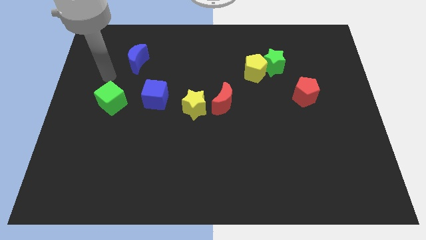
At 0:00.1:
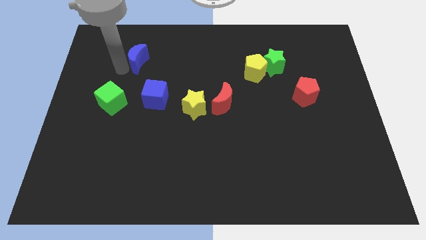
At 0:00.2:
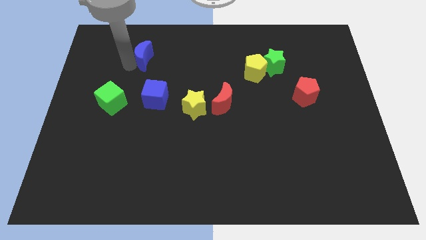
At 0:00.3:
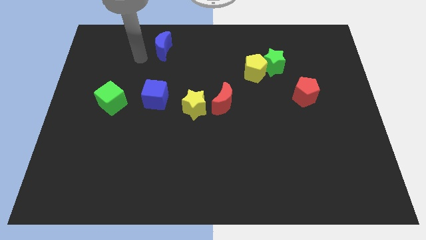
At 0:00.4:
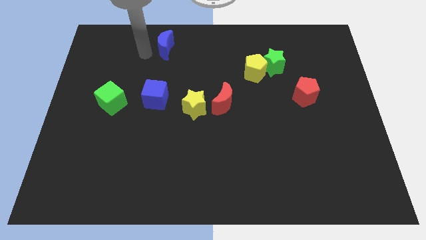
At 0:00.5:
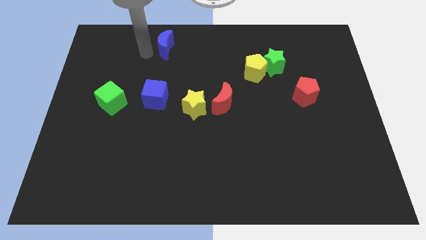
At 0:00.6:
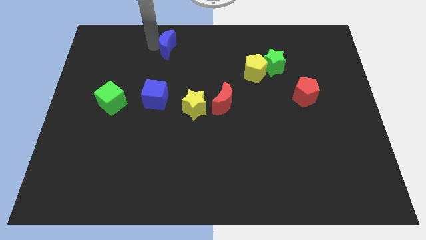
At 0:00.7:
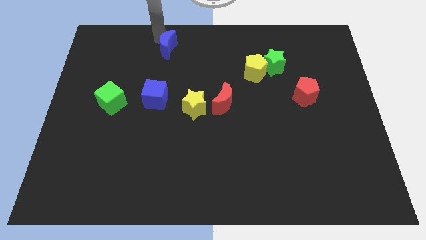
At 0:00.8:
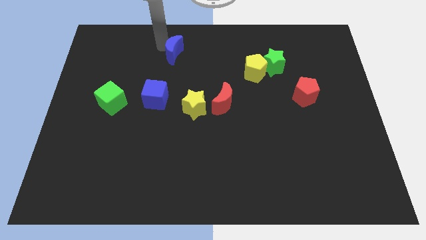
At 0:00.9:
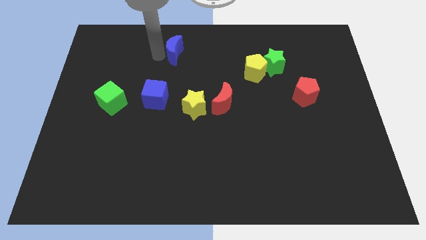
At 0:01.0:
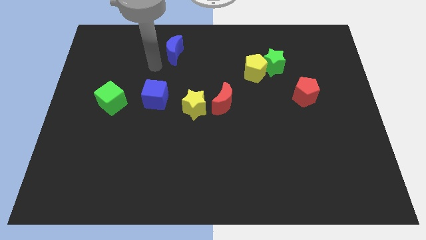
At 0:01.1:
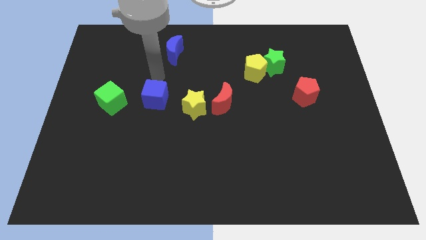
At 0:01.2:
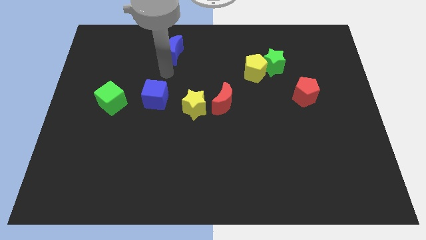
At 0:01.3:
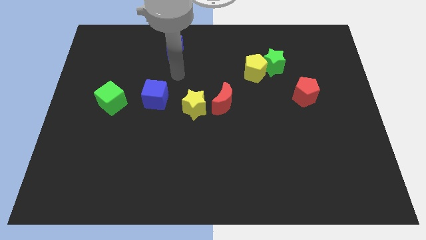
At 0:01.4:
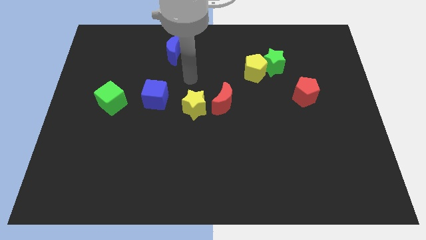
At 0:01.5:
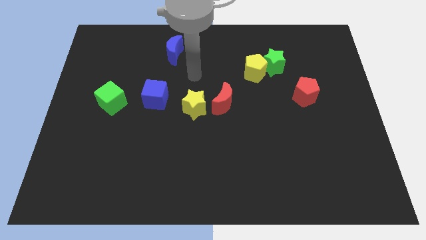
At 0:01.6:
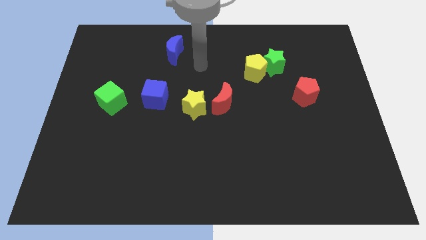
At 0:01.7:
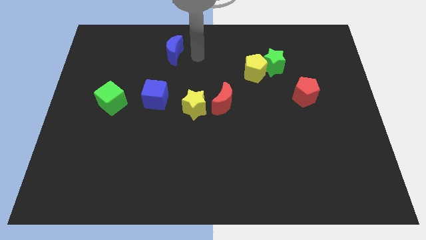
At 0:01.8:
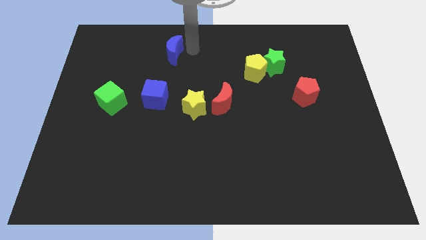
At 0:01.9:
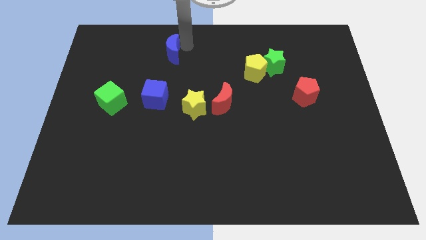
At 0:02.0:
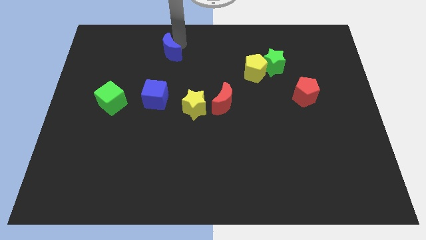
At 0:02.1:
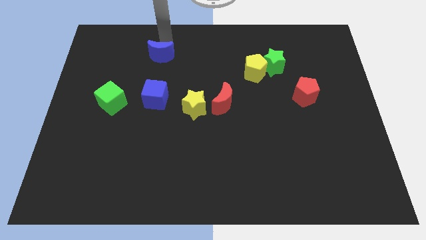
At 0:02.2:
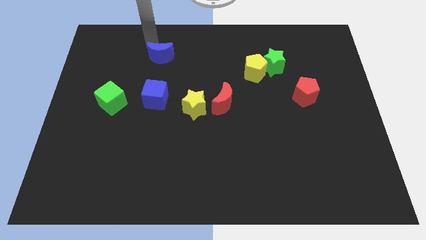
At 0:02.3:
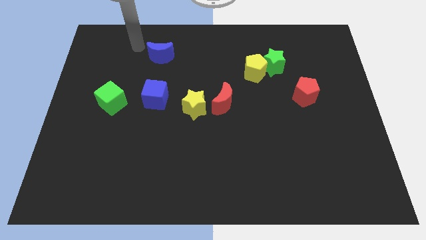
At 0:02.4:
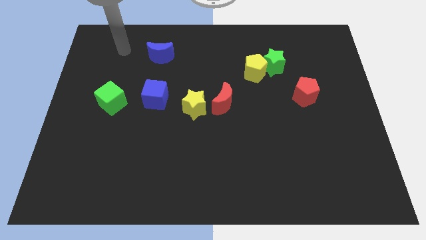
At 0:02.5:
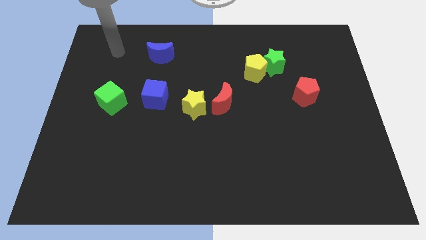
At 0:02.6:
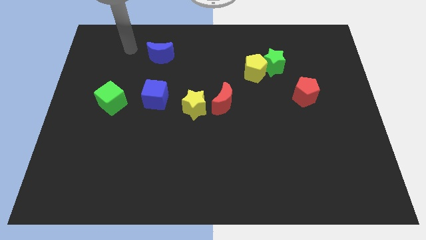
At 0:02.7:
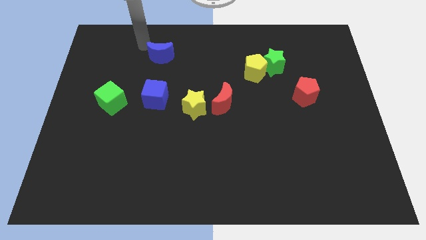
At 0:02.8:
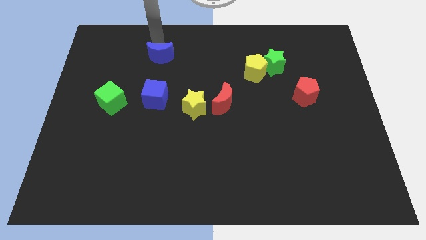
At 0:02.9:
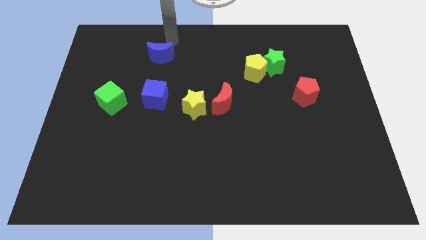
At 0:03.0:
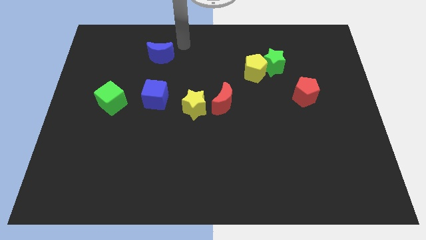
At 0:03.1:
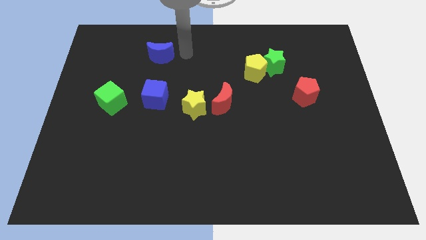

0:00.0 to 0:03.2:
put the blue moon vertically above the blue cube

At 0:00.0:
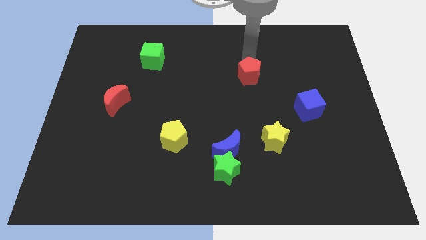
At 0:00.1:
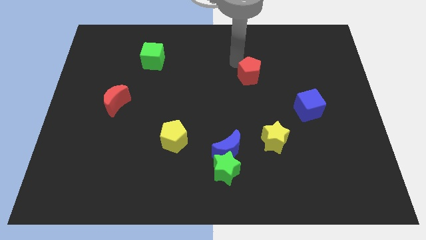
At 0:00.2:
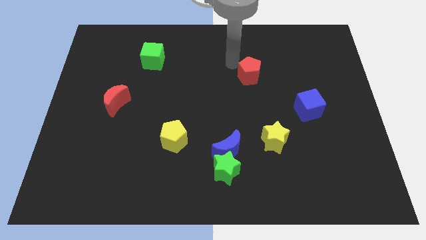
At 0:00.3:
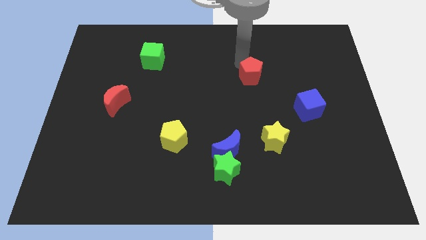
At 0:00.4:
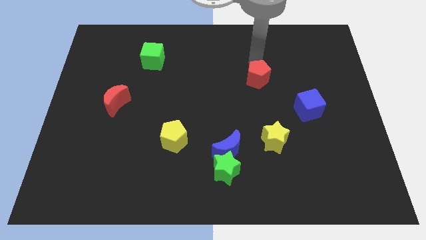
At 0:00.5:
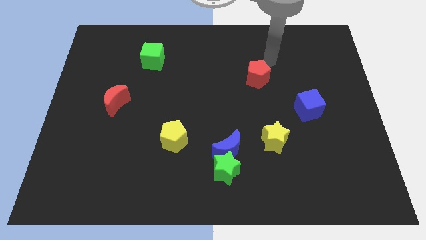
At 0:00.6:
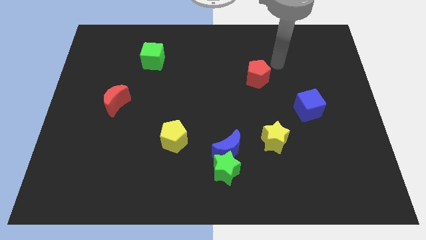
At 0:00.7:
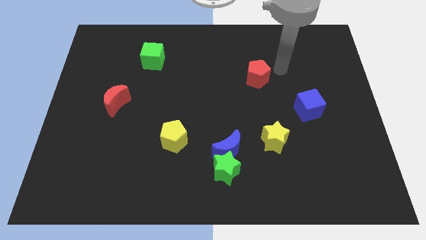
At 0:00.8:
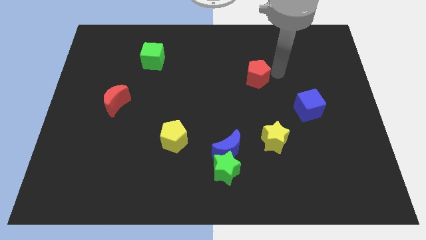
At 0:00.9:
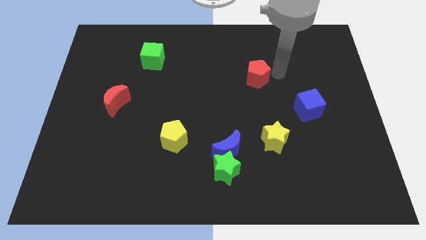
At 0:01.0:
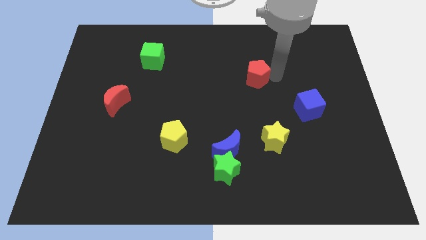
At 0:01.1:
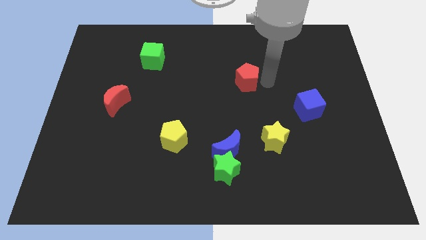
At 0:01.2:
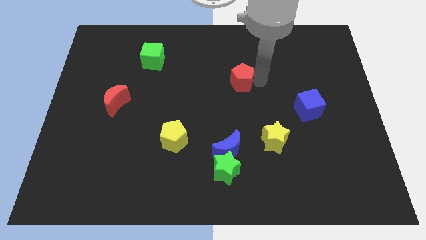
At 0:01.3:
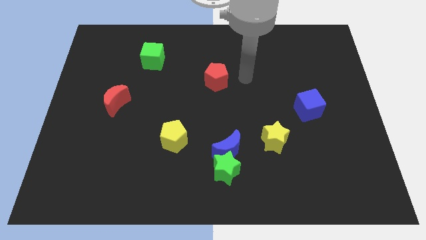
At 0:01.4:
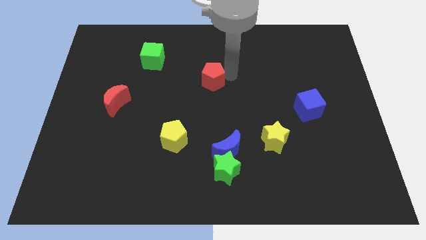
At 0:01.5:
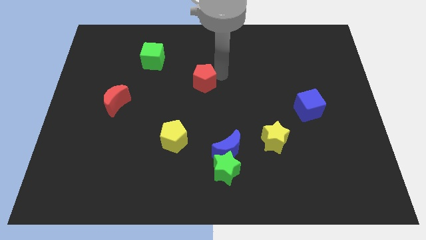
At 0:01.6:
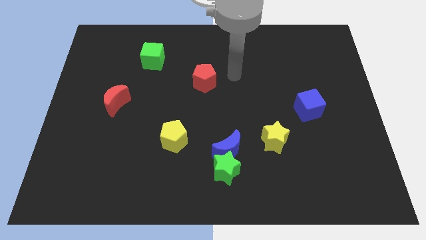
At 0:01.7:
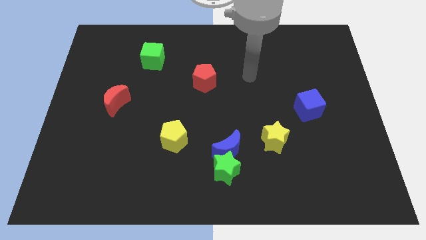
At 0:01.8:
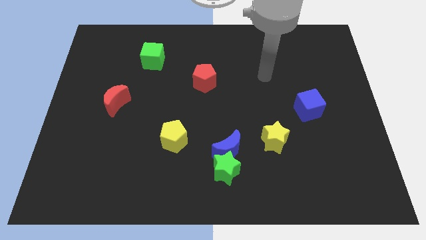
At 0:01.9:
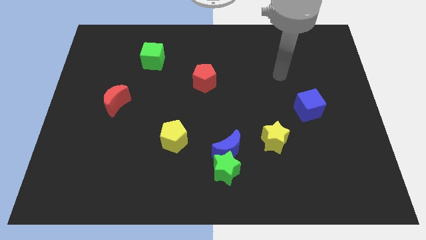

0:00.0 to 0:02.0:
push the red pentagon towards the green cube

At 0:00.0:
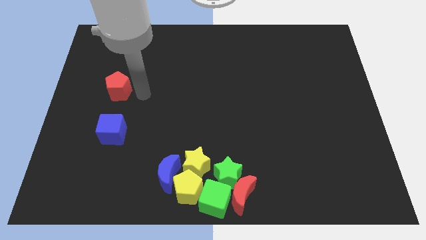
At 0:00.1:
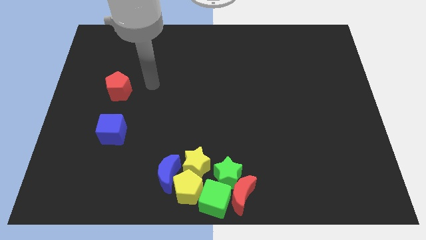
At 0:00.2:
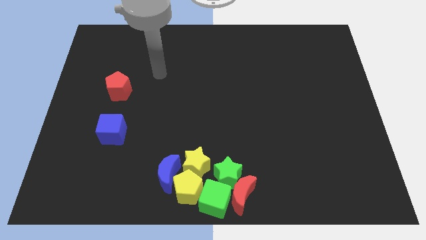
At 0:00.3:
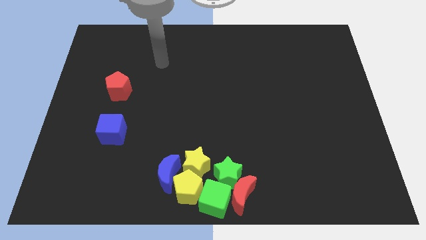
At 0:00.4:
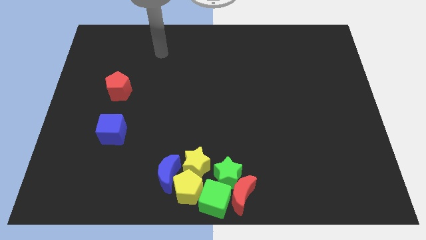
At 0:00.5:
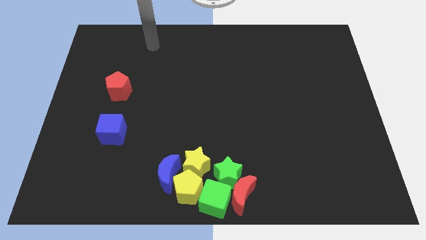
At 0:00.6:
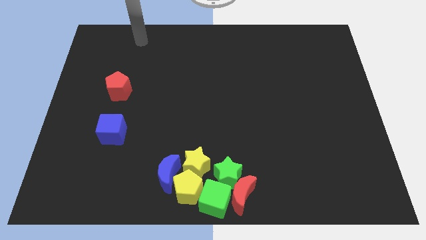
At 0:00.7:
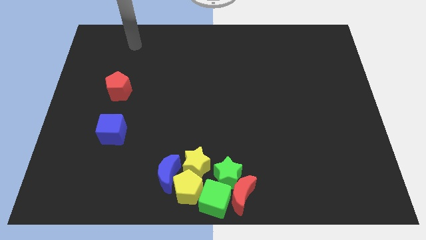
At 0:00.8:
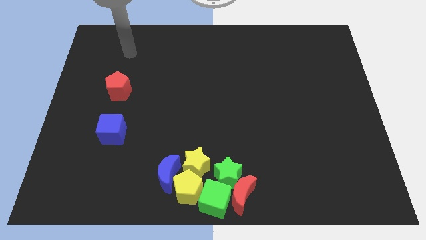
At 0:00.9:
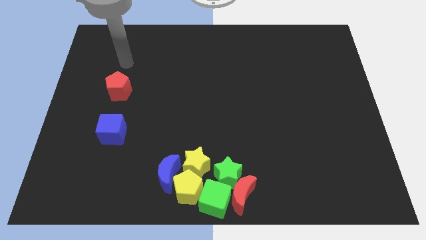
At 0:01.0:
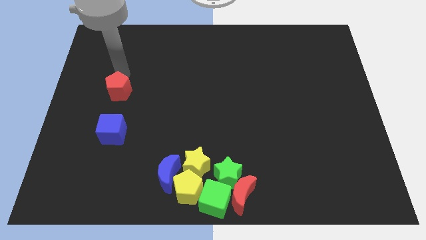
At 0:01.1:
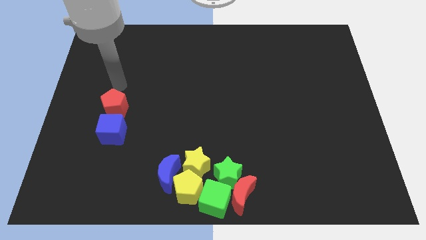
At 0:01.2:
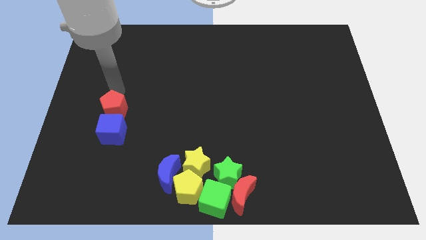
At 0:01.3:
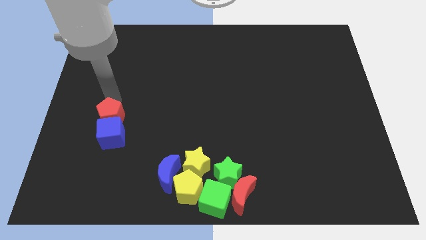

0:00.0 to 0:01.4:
push the red pentagon into the blue cube

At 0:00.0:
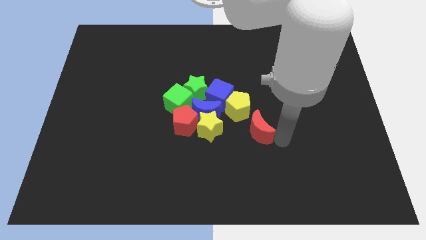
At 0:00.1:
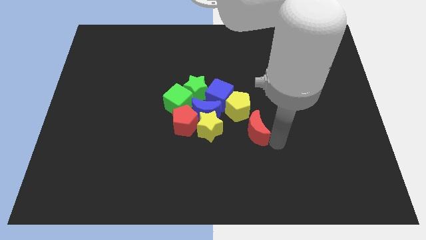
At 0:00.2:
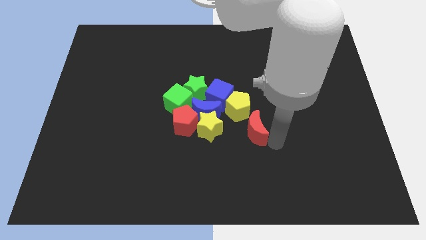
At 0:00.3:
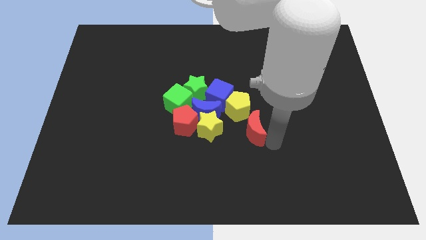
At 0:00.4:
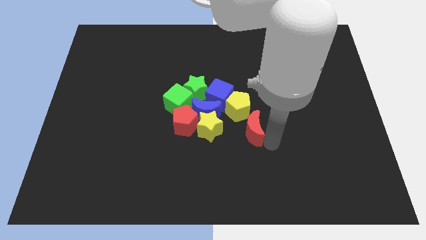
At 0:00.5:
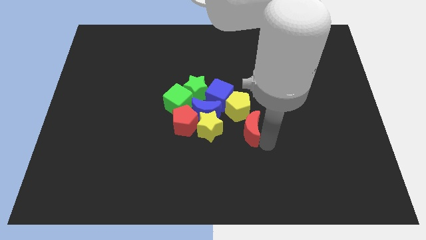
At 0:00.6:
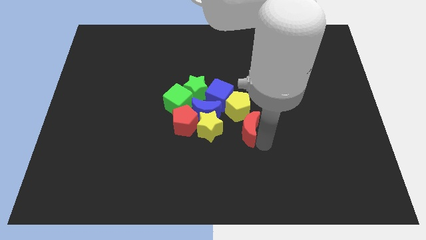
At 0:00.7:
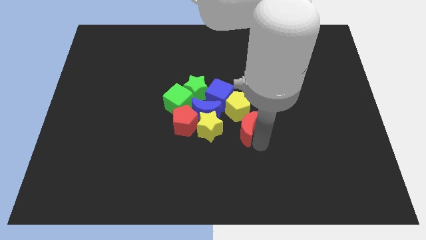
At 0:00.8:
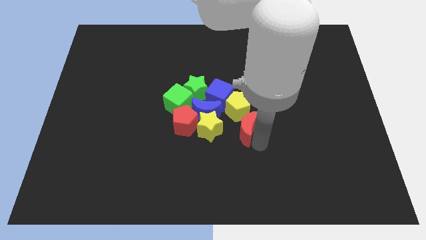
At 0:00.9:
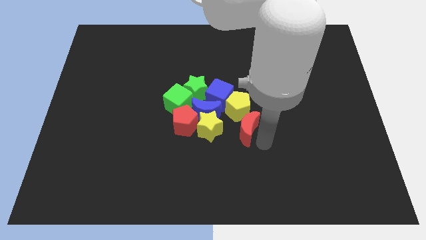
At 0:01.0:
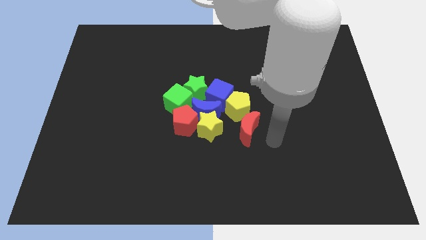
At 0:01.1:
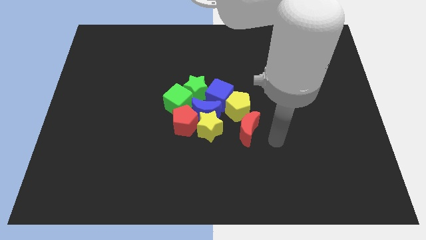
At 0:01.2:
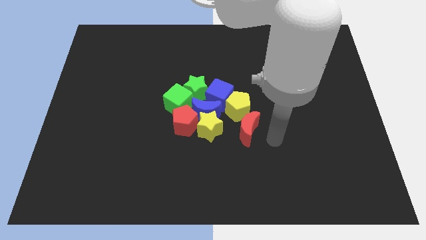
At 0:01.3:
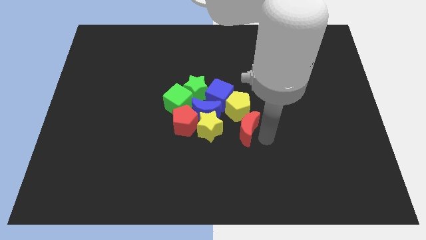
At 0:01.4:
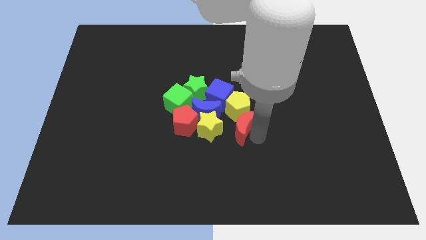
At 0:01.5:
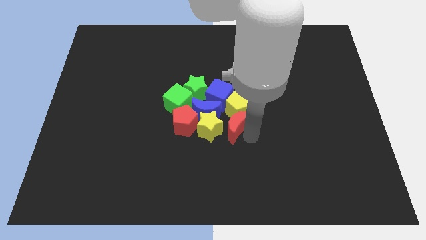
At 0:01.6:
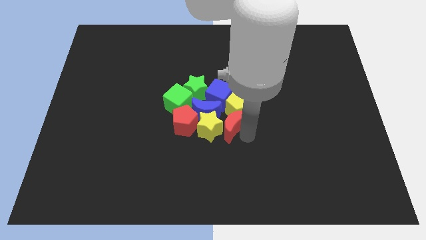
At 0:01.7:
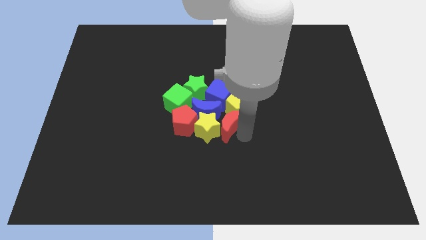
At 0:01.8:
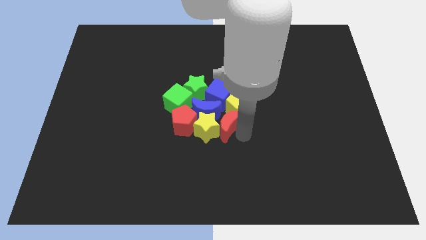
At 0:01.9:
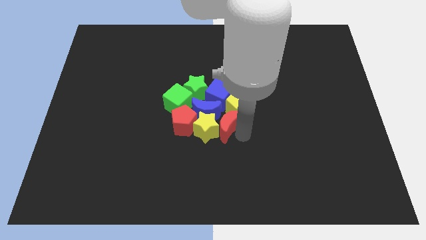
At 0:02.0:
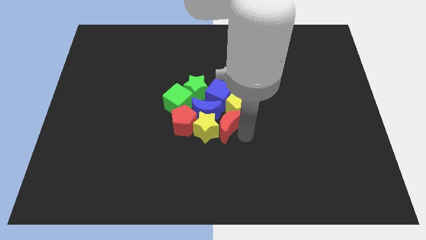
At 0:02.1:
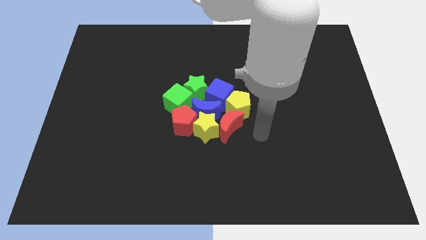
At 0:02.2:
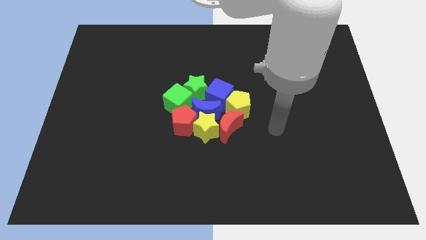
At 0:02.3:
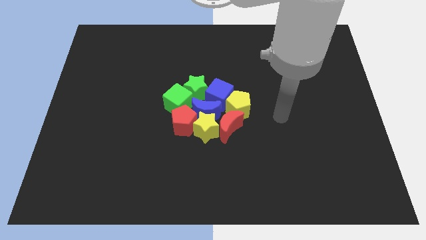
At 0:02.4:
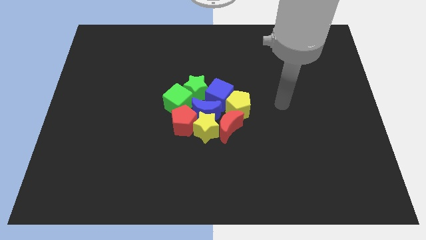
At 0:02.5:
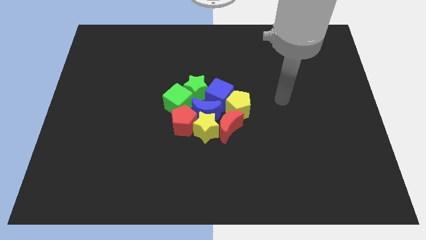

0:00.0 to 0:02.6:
place red crescent close to yellow star
